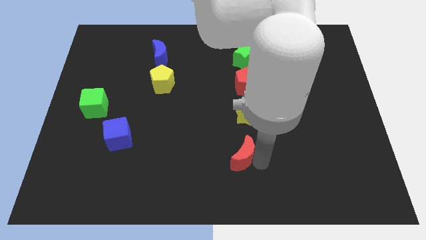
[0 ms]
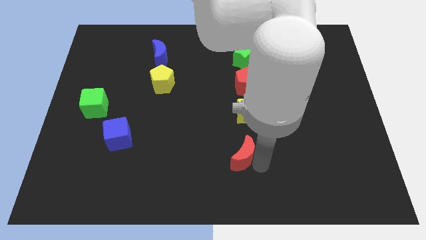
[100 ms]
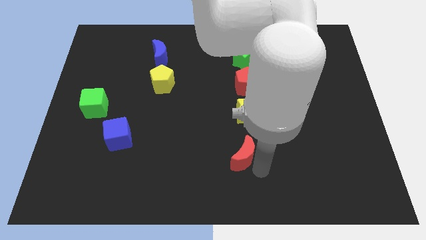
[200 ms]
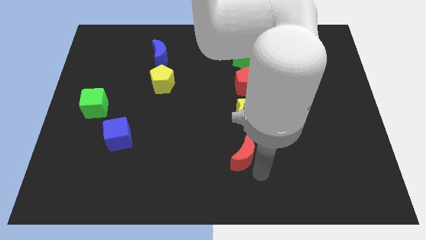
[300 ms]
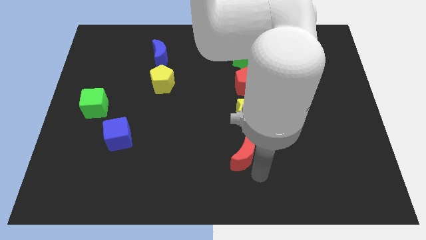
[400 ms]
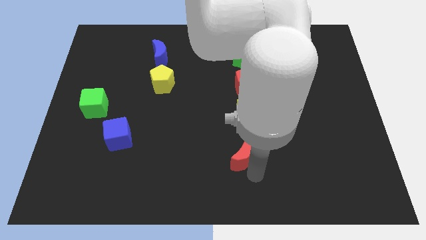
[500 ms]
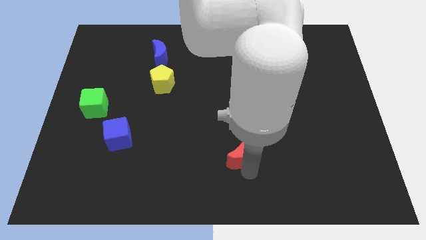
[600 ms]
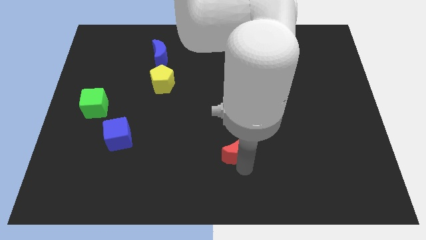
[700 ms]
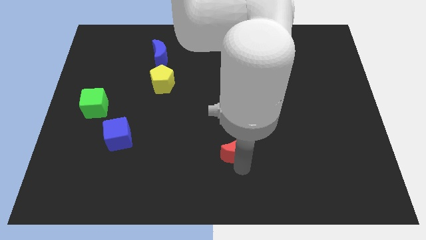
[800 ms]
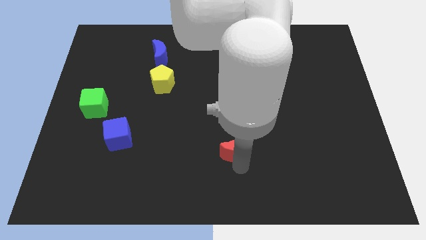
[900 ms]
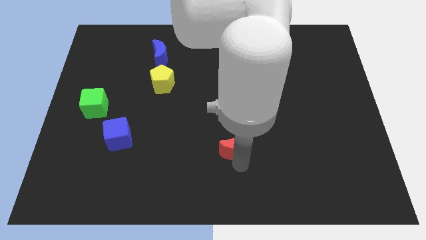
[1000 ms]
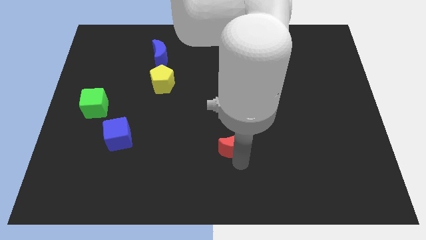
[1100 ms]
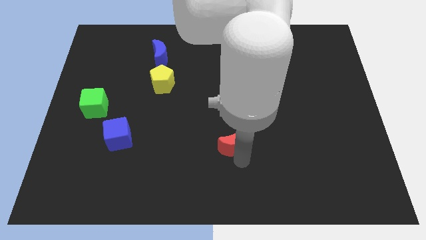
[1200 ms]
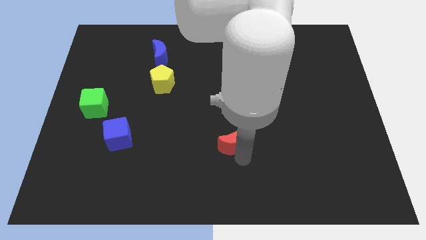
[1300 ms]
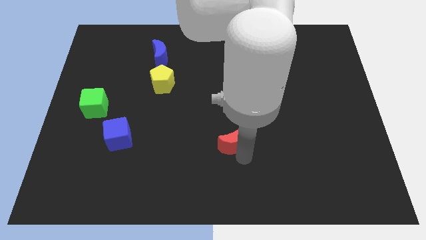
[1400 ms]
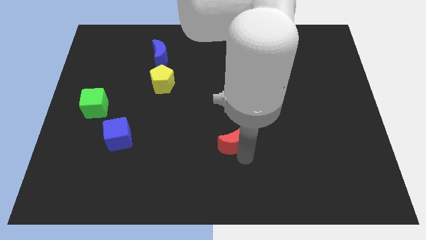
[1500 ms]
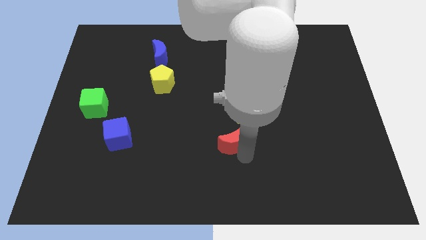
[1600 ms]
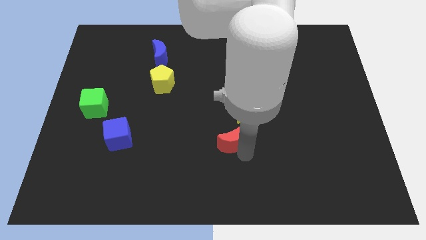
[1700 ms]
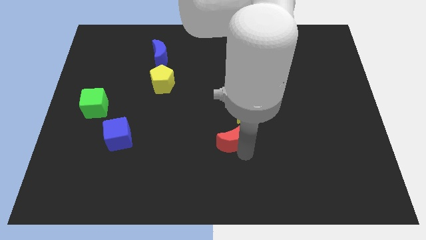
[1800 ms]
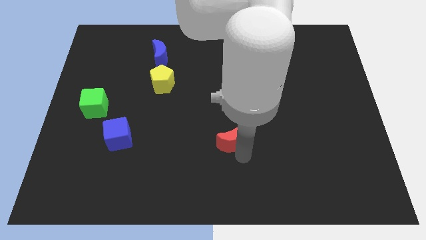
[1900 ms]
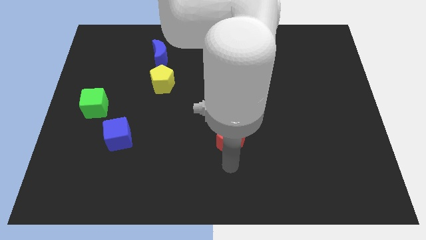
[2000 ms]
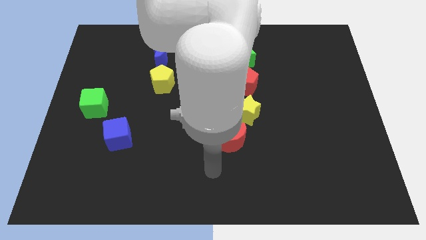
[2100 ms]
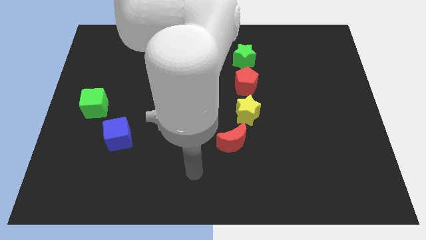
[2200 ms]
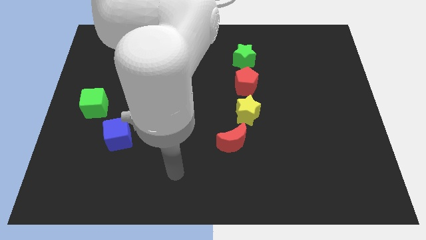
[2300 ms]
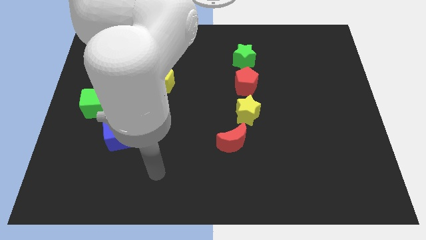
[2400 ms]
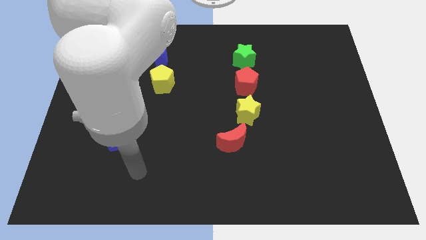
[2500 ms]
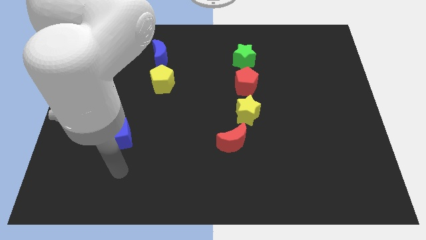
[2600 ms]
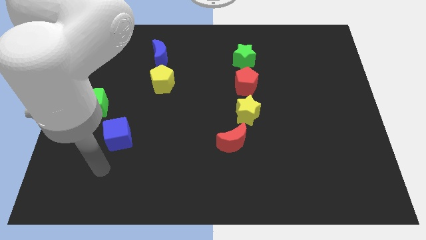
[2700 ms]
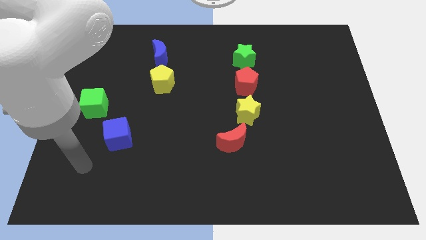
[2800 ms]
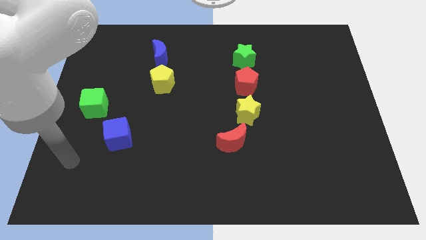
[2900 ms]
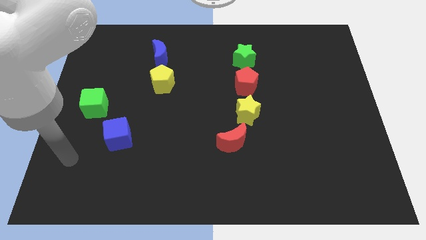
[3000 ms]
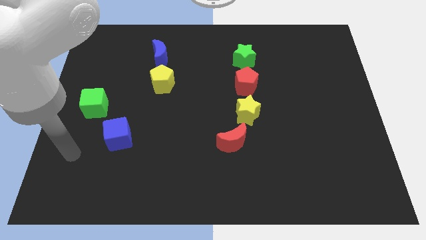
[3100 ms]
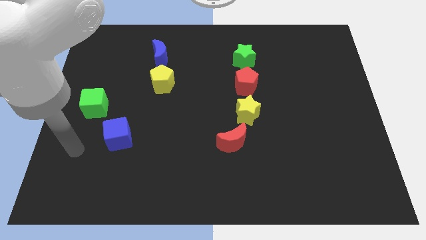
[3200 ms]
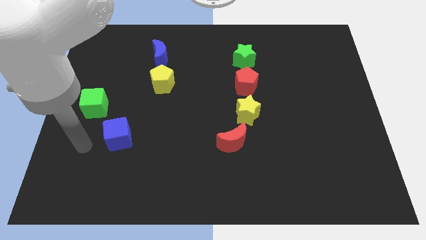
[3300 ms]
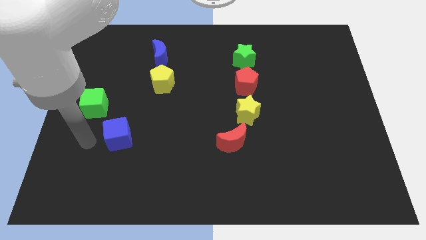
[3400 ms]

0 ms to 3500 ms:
place red moon below the yellow star

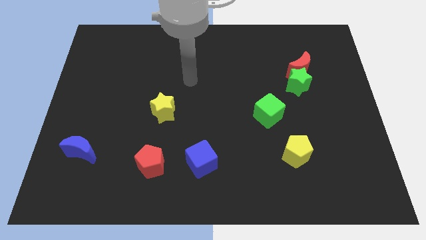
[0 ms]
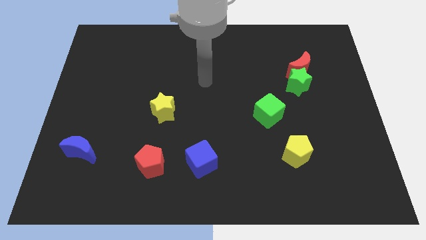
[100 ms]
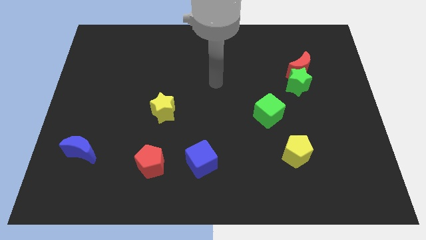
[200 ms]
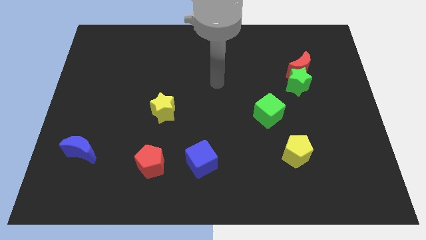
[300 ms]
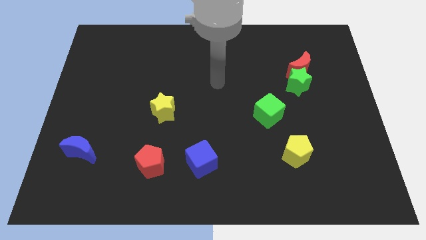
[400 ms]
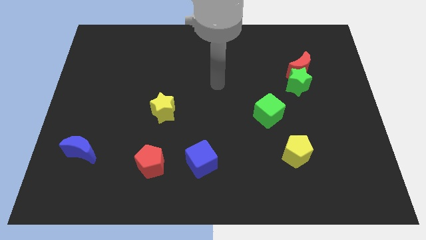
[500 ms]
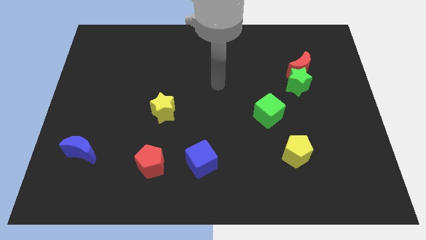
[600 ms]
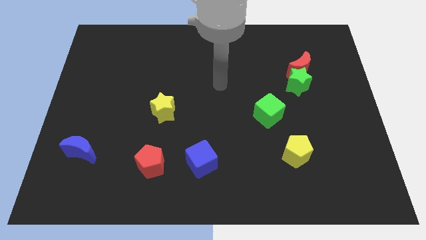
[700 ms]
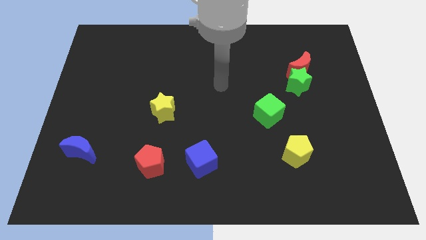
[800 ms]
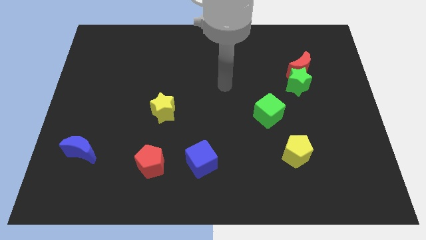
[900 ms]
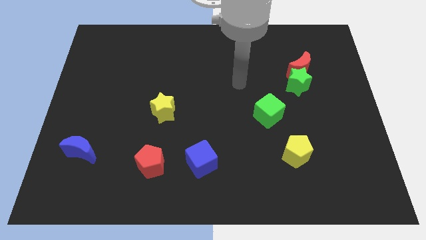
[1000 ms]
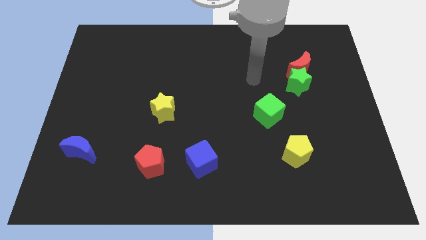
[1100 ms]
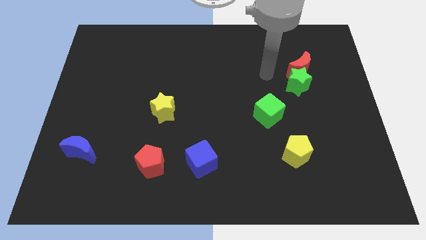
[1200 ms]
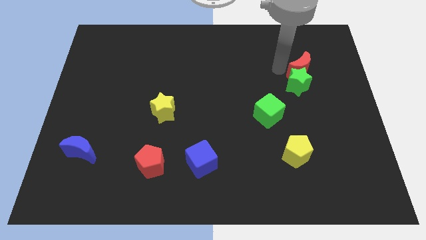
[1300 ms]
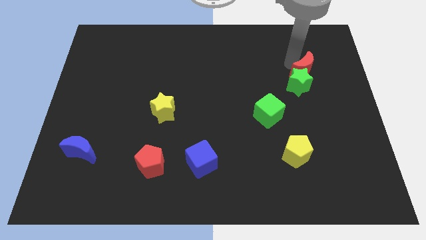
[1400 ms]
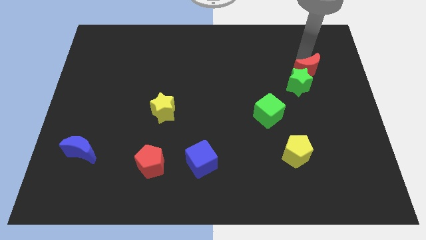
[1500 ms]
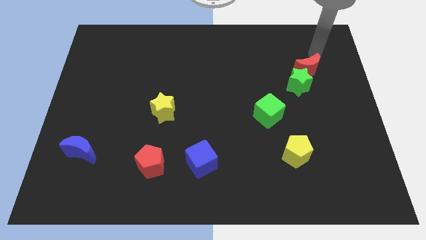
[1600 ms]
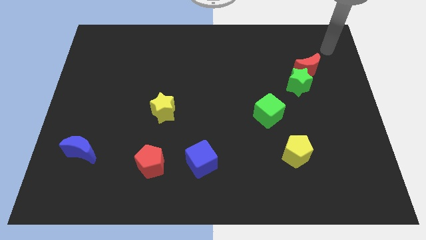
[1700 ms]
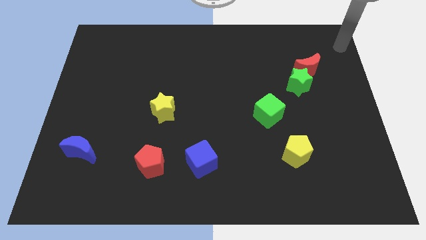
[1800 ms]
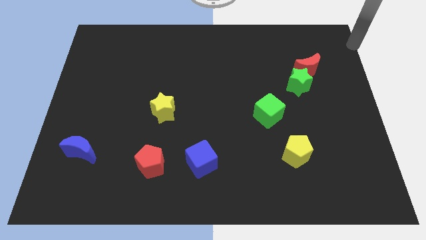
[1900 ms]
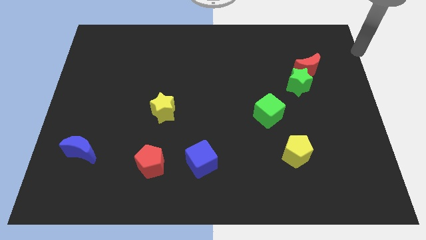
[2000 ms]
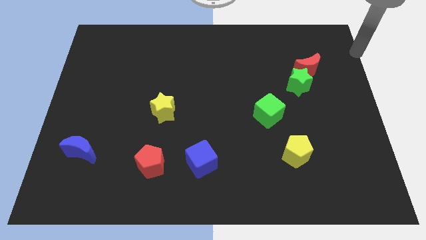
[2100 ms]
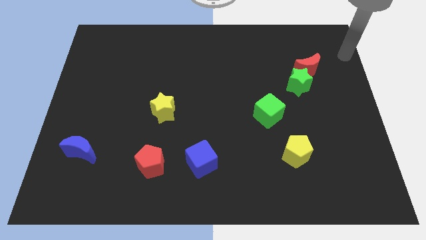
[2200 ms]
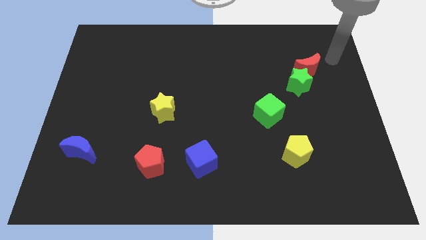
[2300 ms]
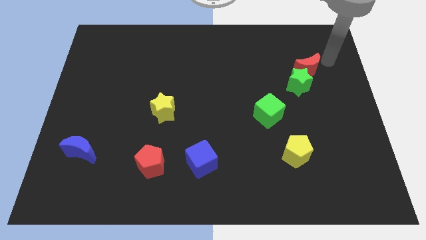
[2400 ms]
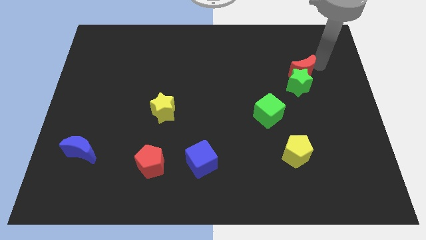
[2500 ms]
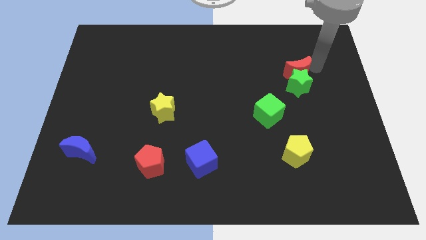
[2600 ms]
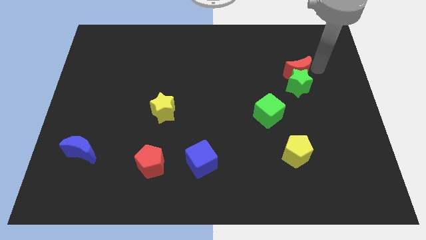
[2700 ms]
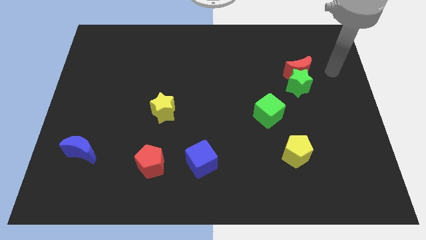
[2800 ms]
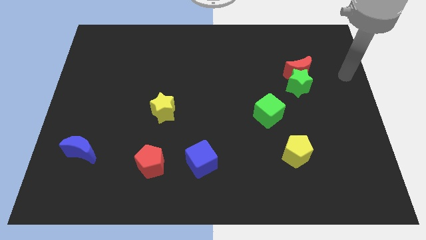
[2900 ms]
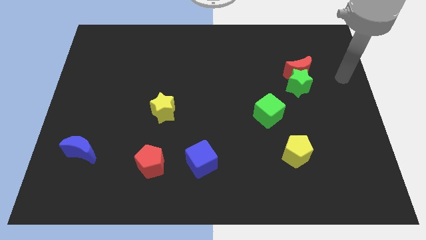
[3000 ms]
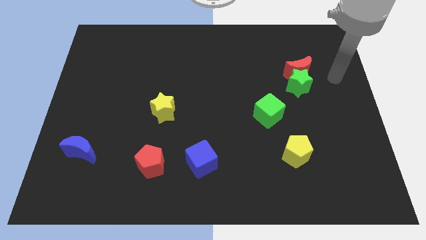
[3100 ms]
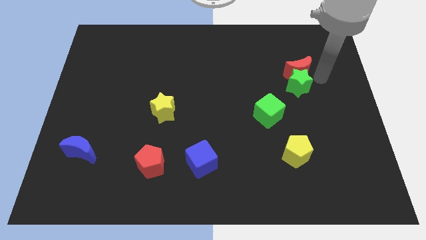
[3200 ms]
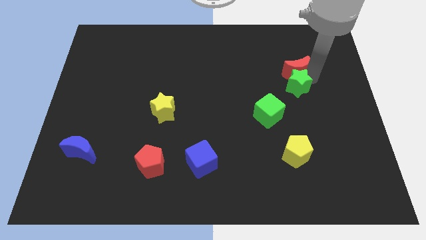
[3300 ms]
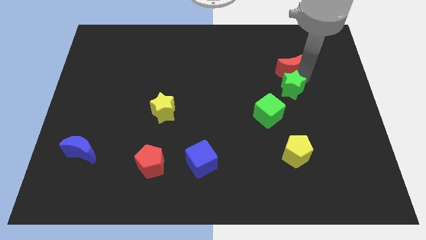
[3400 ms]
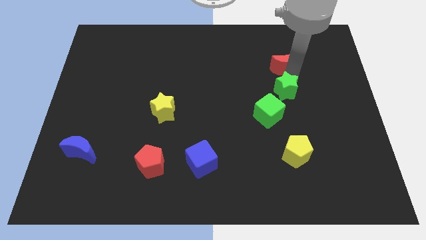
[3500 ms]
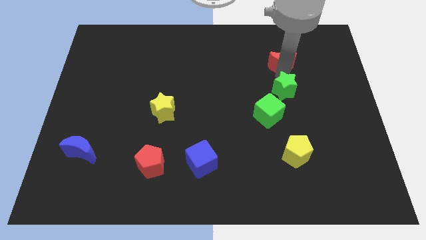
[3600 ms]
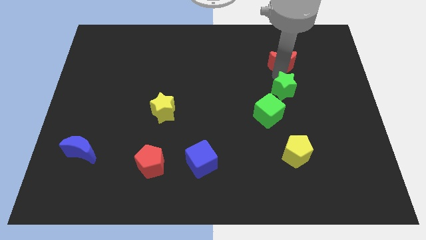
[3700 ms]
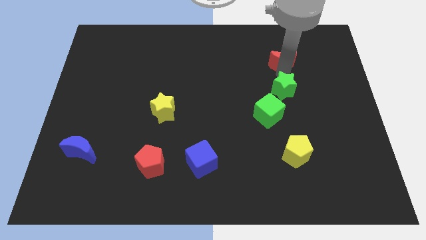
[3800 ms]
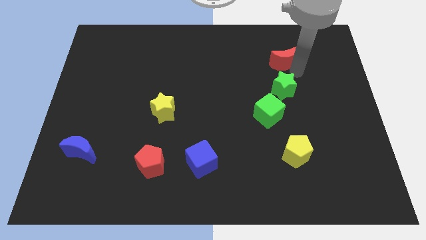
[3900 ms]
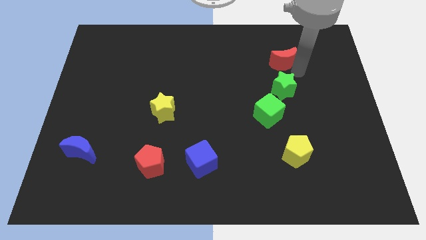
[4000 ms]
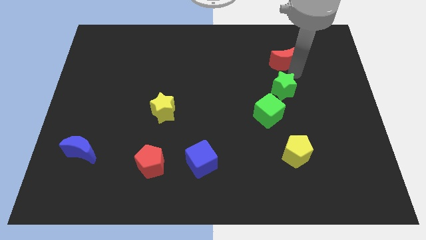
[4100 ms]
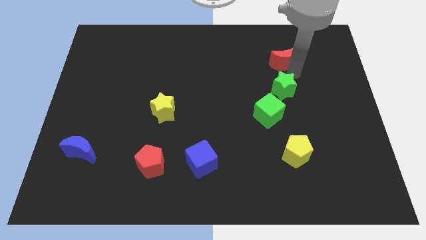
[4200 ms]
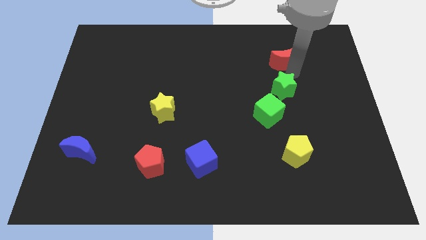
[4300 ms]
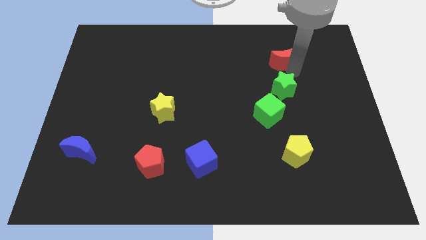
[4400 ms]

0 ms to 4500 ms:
separate the red moon from green star

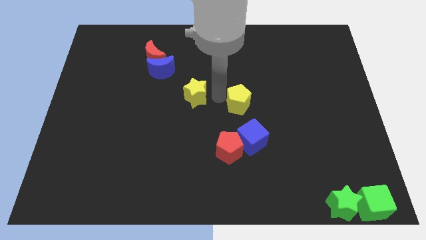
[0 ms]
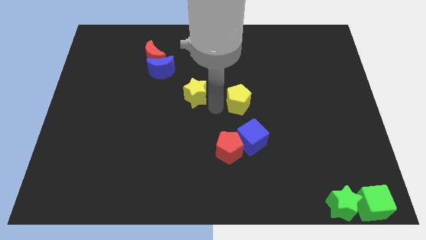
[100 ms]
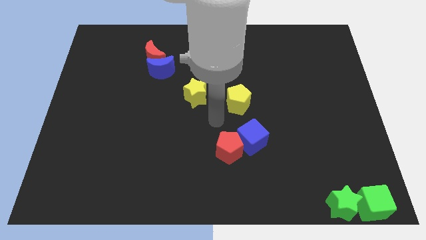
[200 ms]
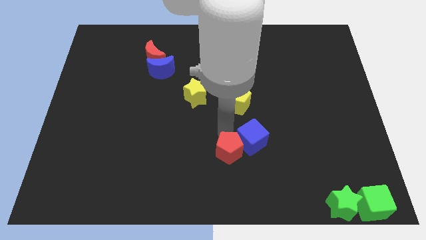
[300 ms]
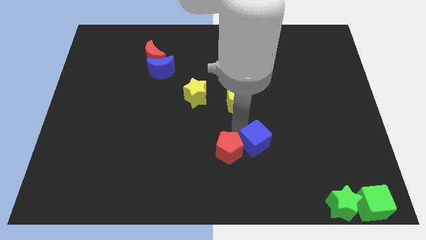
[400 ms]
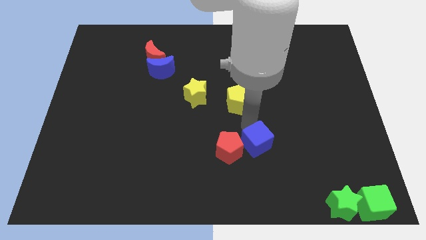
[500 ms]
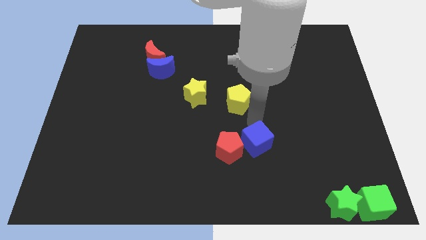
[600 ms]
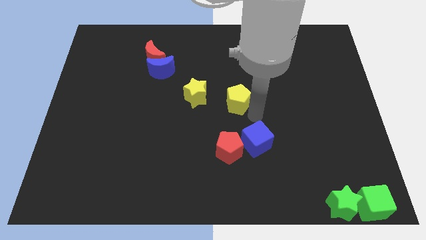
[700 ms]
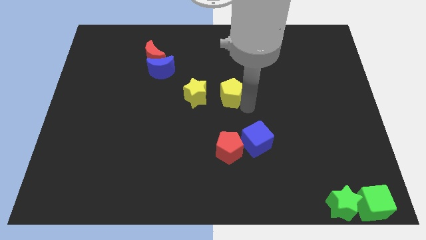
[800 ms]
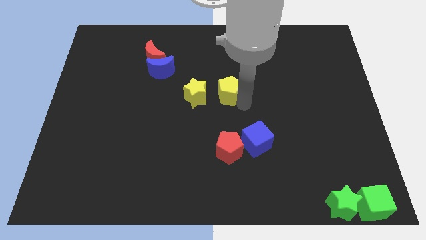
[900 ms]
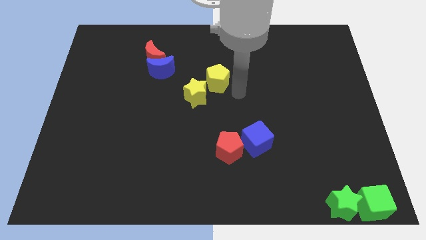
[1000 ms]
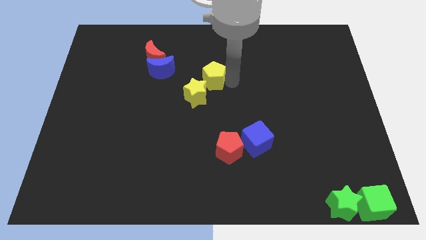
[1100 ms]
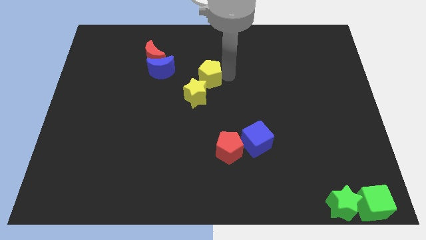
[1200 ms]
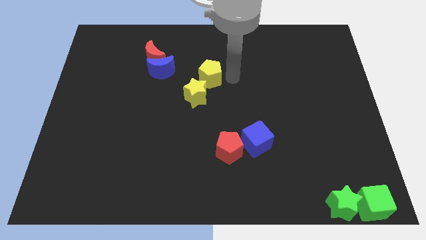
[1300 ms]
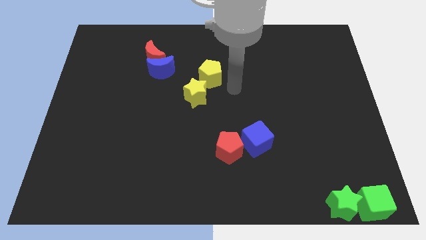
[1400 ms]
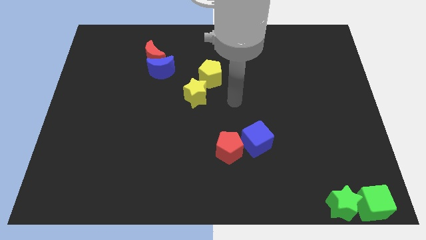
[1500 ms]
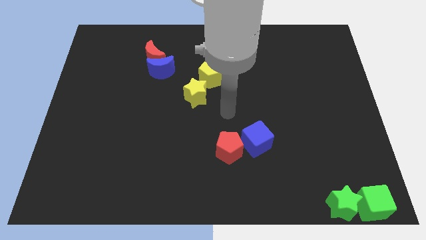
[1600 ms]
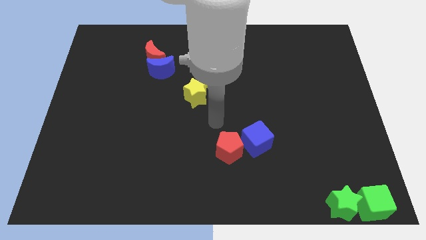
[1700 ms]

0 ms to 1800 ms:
put the pentagon at the top right side of the yellow star
